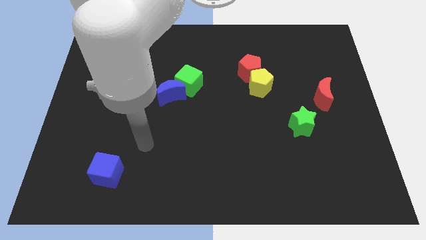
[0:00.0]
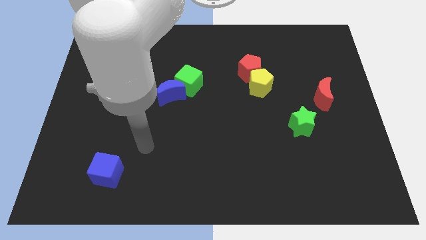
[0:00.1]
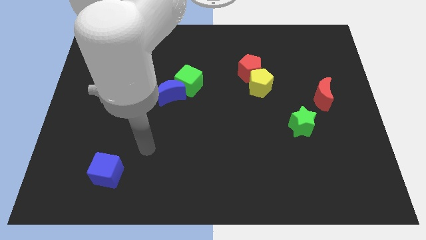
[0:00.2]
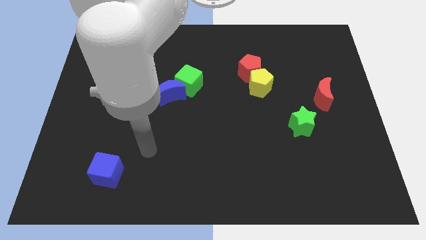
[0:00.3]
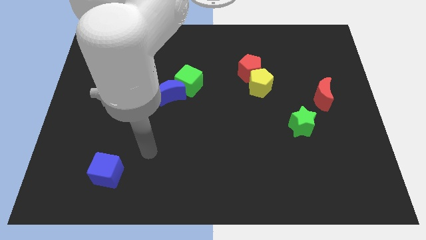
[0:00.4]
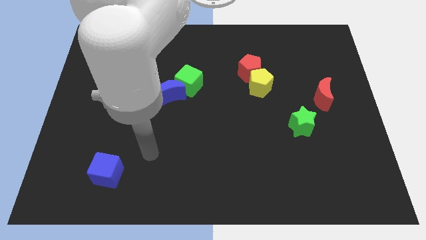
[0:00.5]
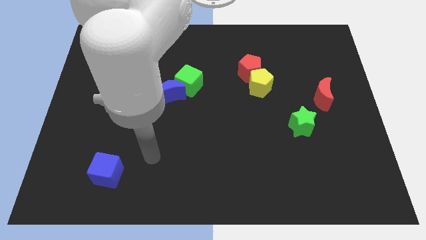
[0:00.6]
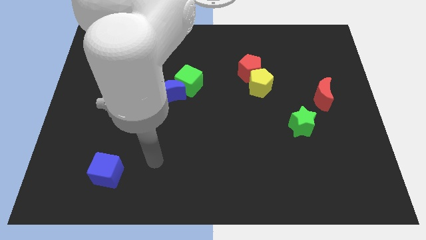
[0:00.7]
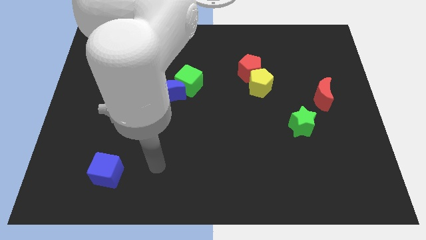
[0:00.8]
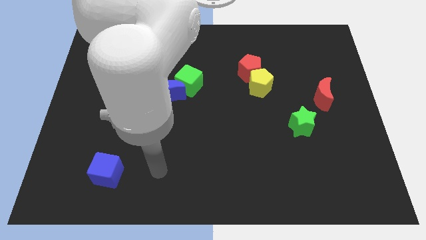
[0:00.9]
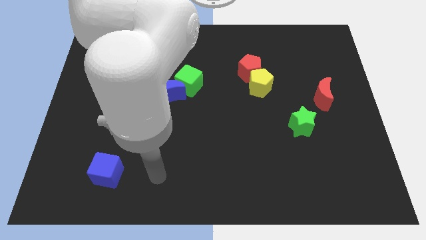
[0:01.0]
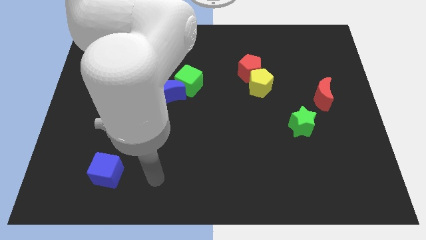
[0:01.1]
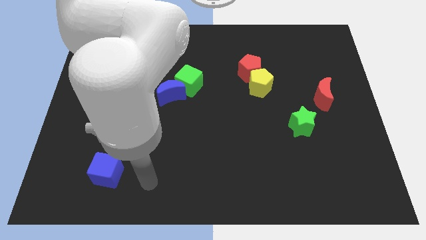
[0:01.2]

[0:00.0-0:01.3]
move yourself to the right side of the blue cube

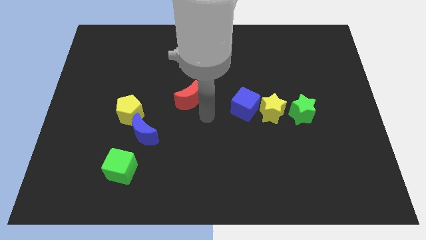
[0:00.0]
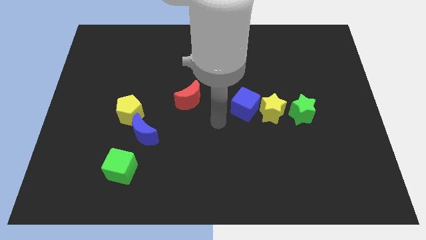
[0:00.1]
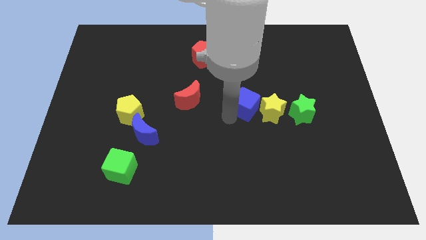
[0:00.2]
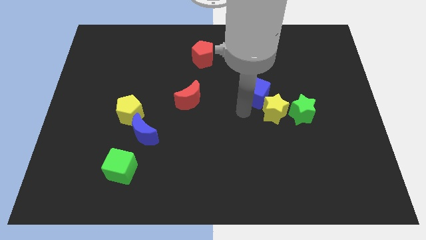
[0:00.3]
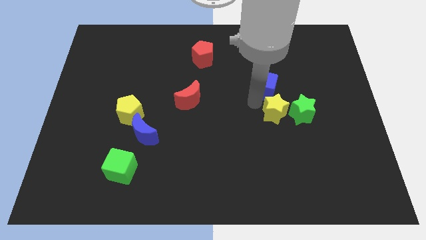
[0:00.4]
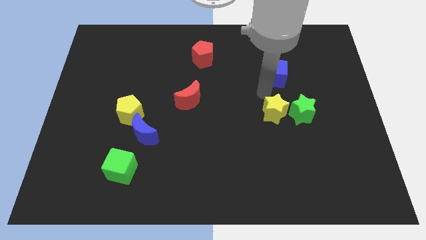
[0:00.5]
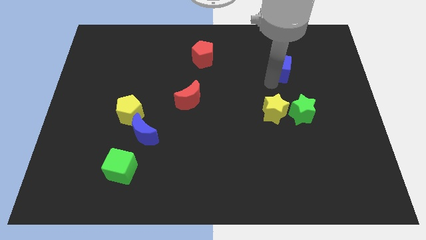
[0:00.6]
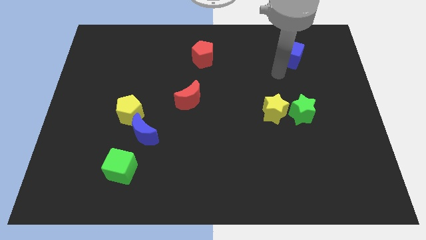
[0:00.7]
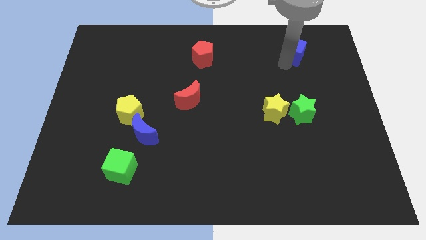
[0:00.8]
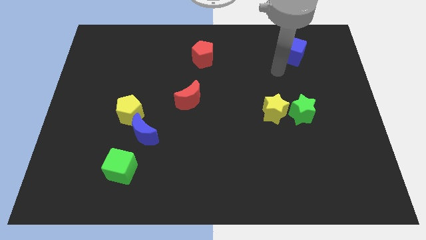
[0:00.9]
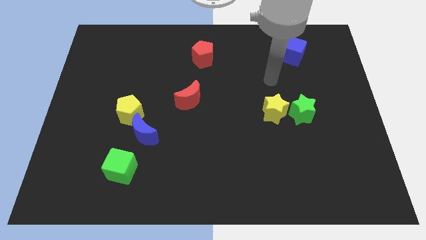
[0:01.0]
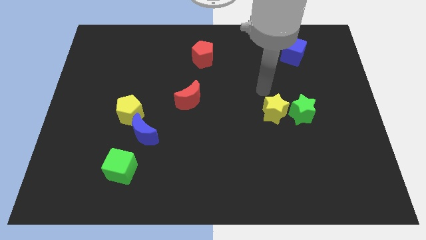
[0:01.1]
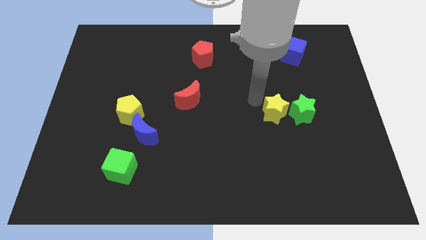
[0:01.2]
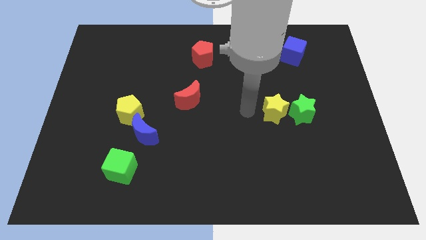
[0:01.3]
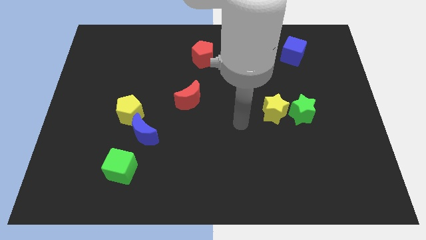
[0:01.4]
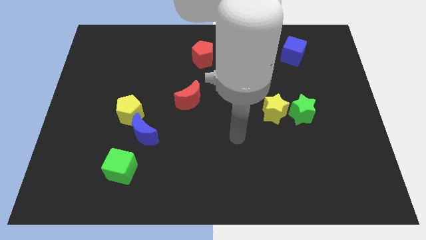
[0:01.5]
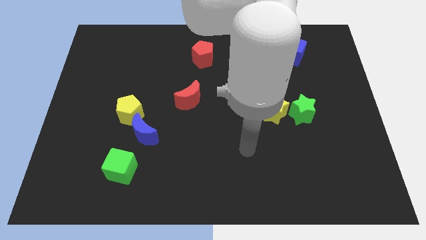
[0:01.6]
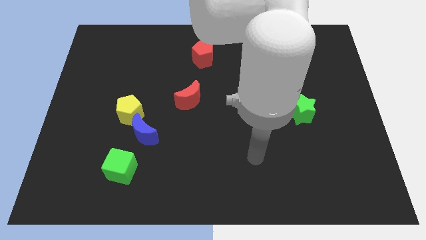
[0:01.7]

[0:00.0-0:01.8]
separate the blue cube from the yellow star

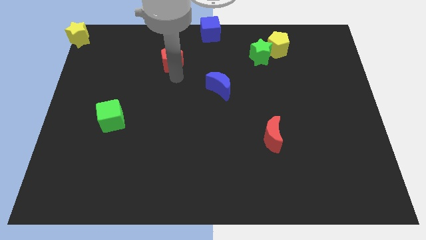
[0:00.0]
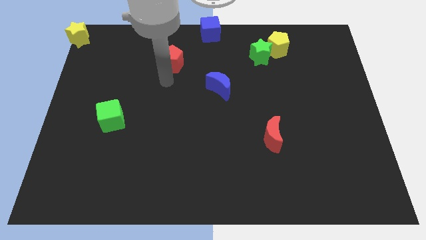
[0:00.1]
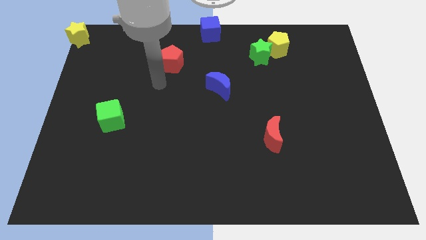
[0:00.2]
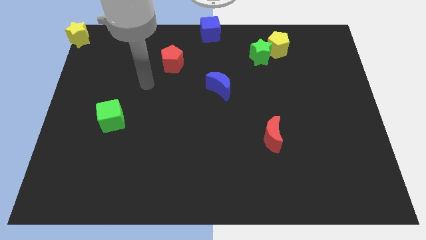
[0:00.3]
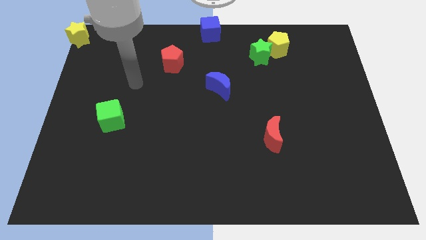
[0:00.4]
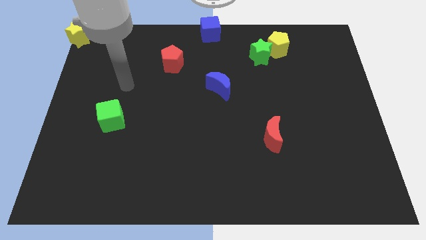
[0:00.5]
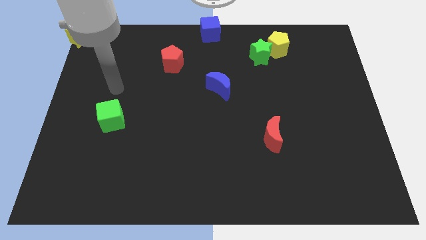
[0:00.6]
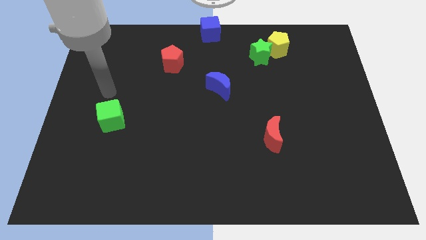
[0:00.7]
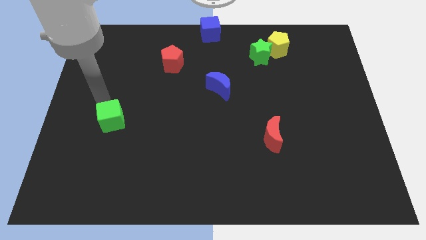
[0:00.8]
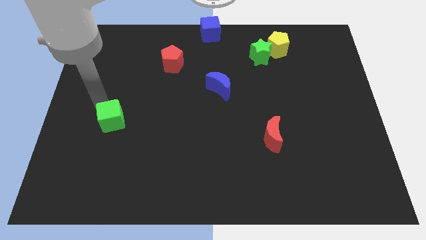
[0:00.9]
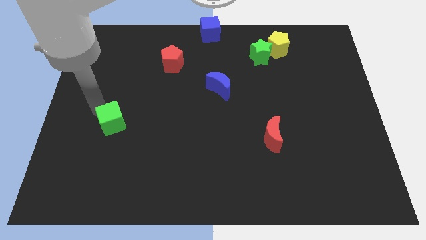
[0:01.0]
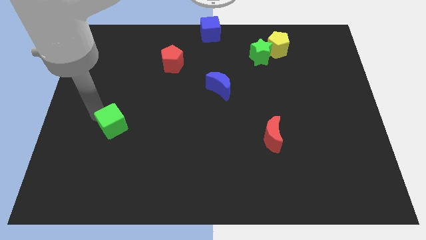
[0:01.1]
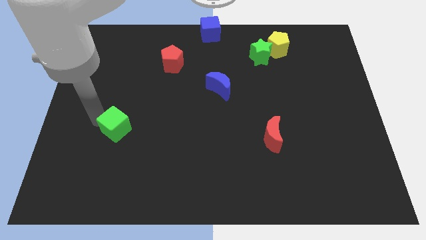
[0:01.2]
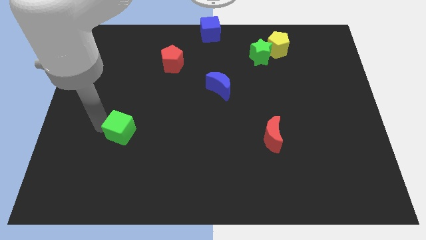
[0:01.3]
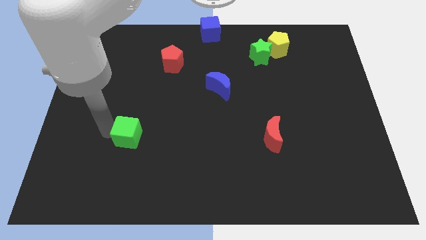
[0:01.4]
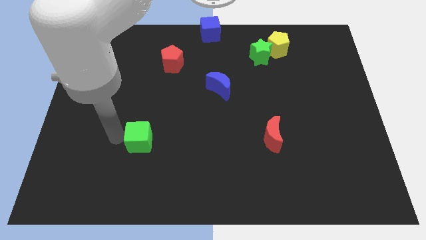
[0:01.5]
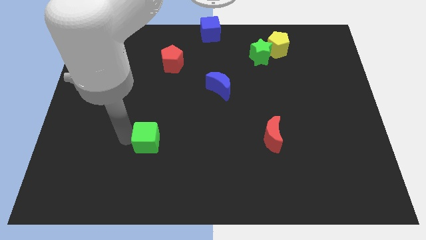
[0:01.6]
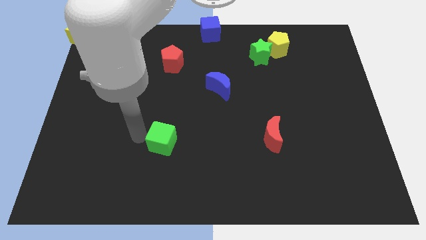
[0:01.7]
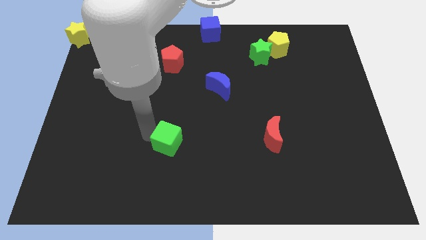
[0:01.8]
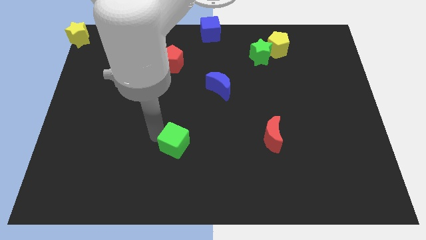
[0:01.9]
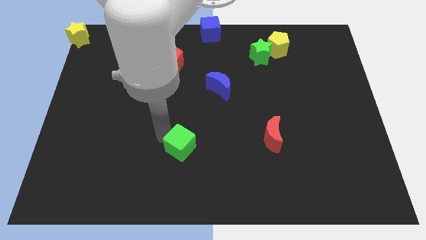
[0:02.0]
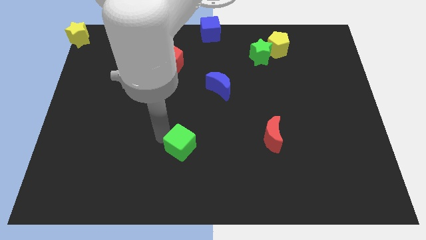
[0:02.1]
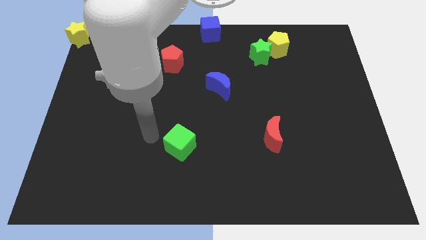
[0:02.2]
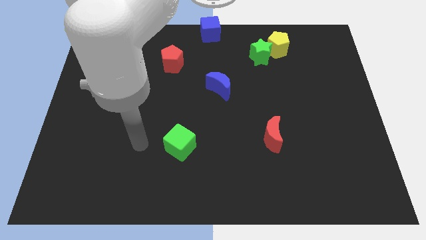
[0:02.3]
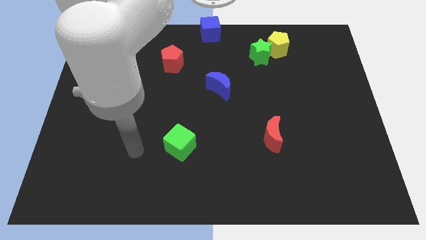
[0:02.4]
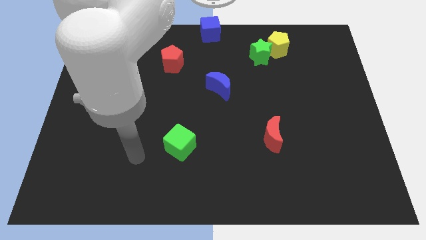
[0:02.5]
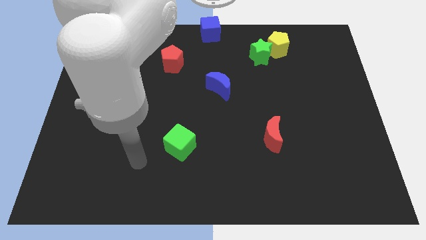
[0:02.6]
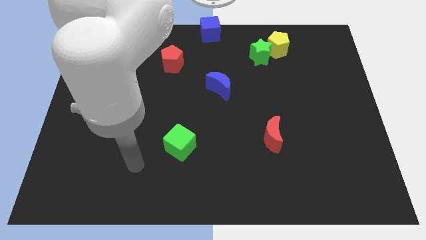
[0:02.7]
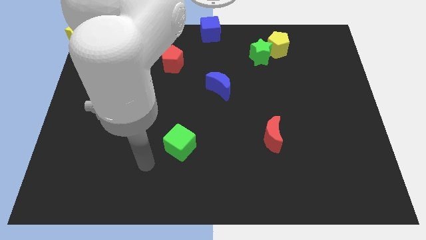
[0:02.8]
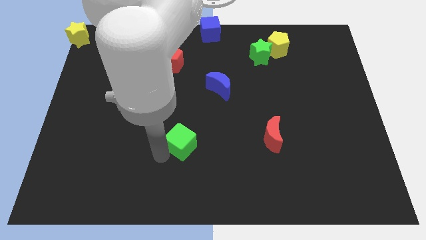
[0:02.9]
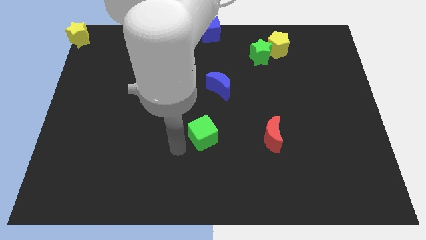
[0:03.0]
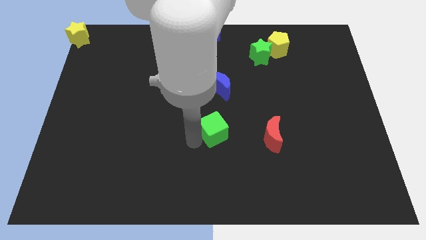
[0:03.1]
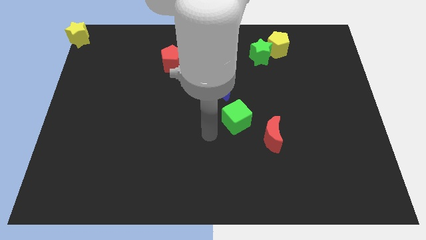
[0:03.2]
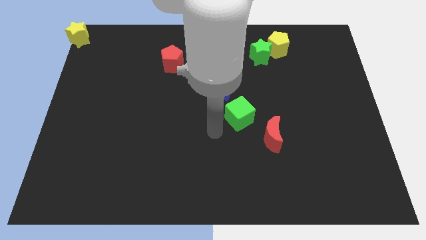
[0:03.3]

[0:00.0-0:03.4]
move the green cube between red and blue moon

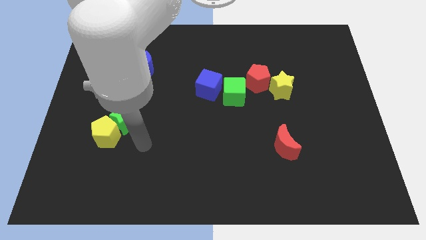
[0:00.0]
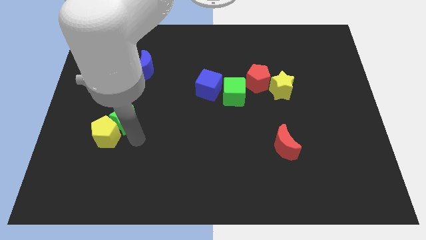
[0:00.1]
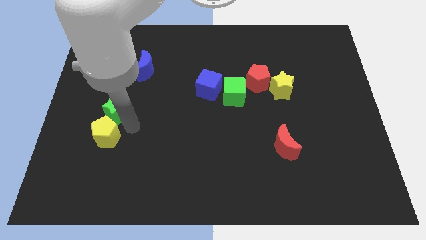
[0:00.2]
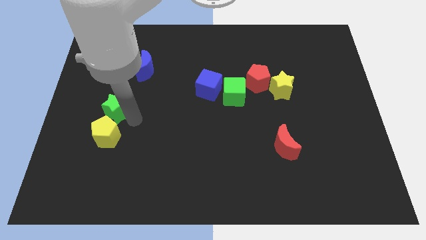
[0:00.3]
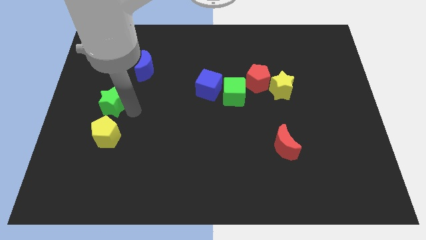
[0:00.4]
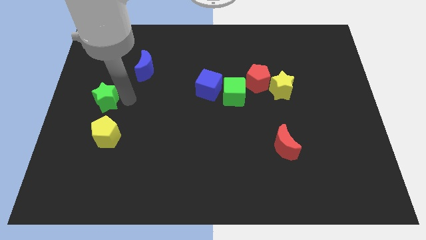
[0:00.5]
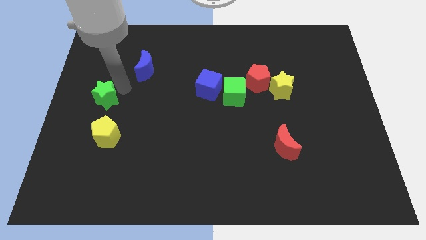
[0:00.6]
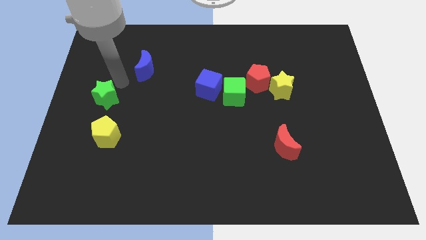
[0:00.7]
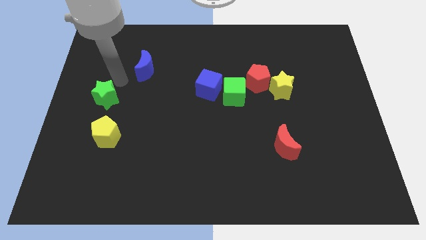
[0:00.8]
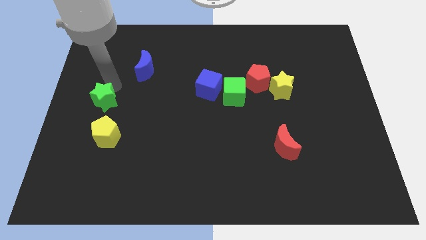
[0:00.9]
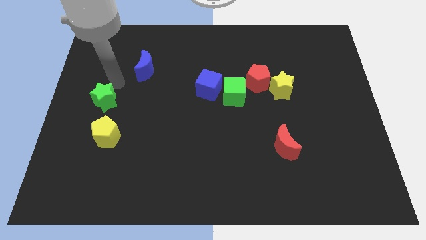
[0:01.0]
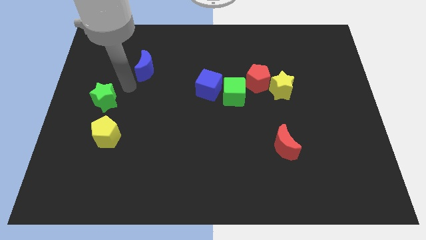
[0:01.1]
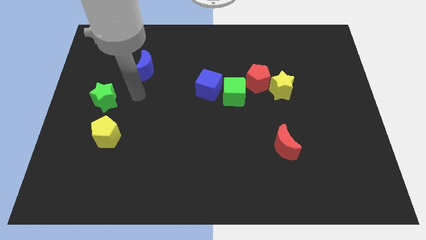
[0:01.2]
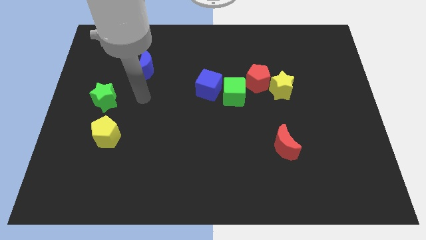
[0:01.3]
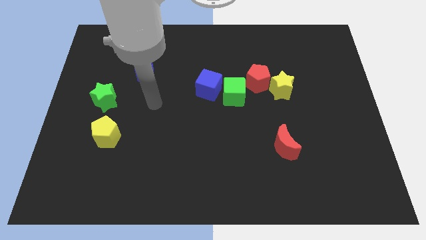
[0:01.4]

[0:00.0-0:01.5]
separate the green star from the yellow pentagon

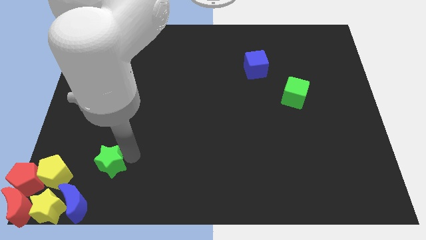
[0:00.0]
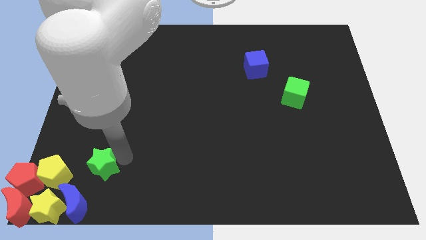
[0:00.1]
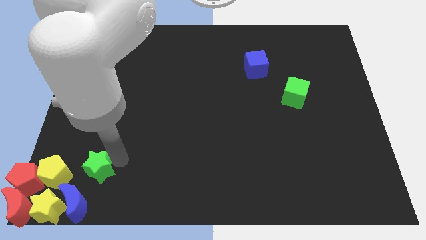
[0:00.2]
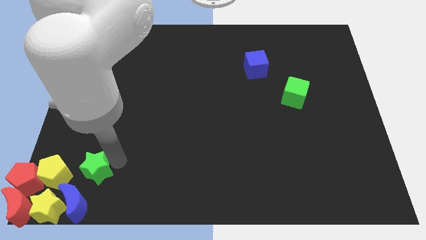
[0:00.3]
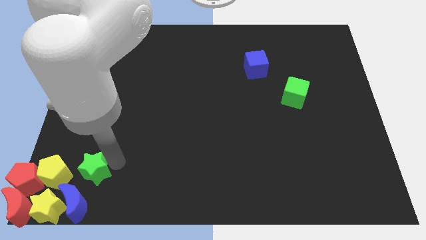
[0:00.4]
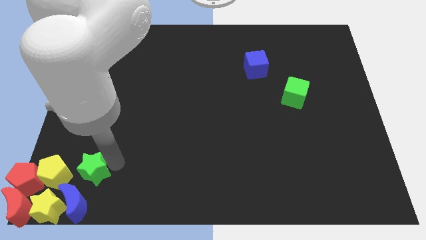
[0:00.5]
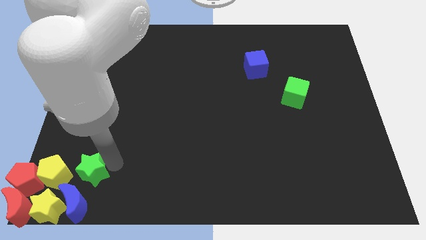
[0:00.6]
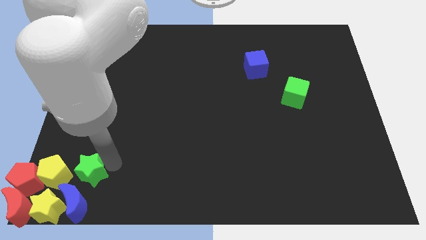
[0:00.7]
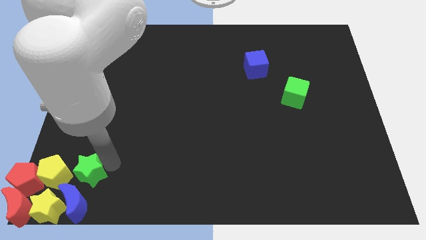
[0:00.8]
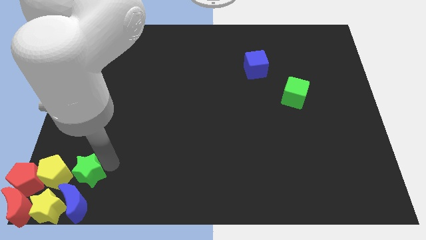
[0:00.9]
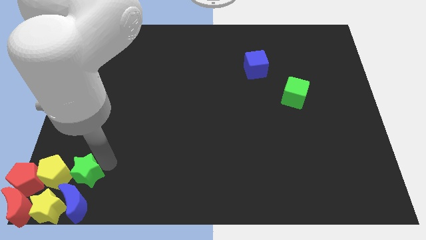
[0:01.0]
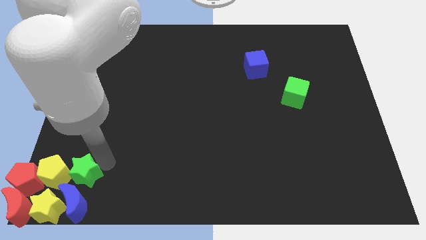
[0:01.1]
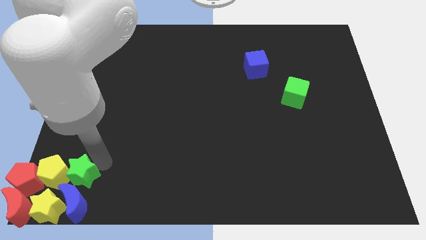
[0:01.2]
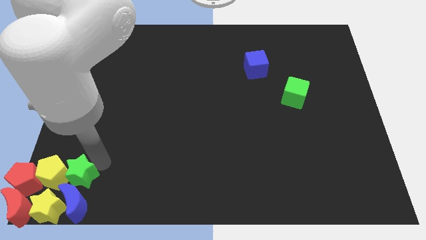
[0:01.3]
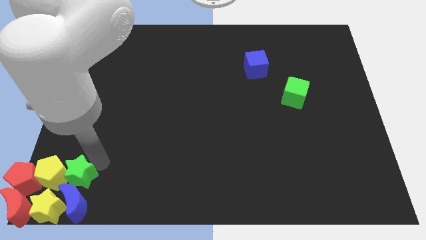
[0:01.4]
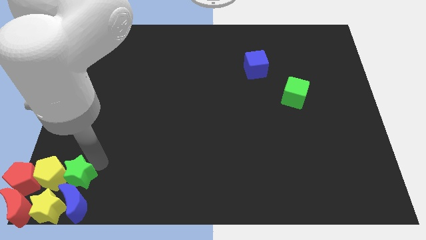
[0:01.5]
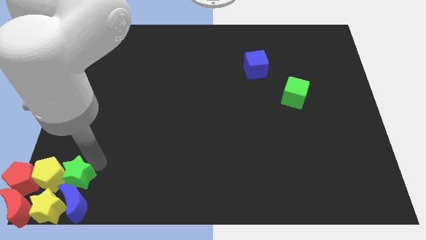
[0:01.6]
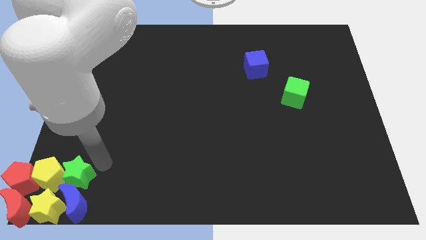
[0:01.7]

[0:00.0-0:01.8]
place the green star at the right side of the yellow pentagon
